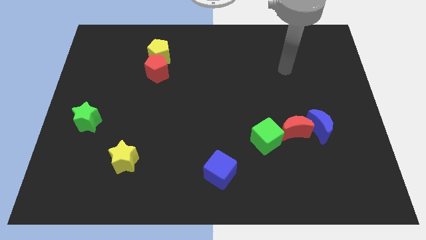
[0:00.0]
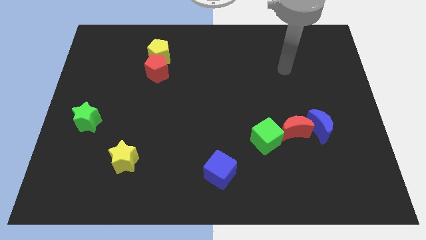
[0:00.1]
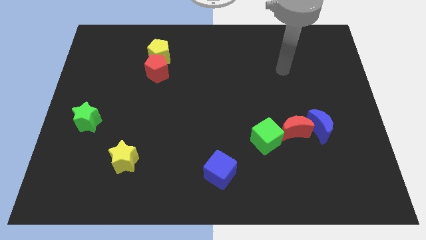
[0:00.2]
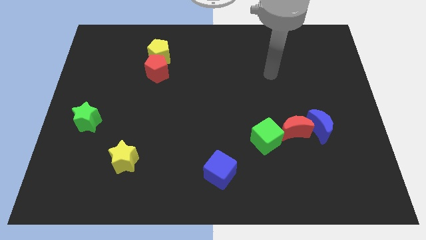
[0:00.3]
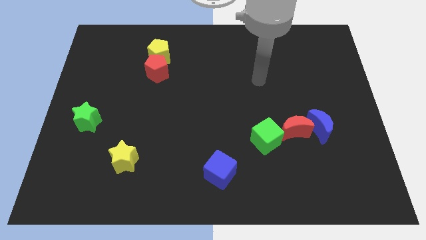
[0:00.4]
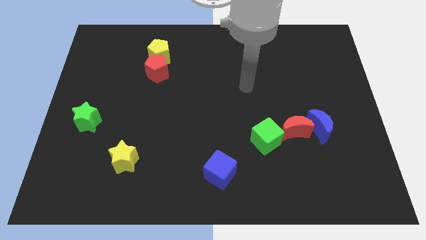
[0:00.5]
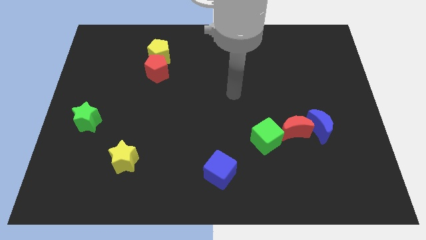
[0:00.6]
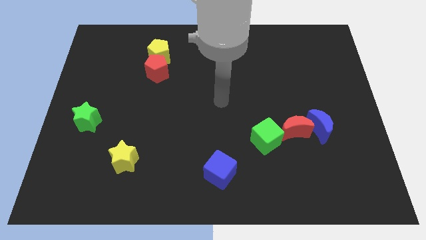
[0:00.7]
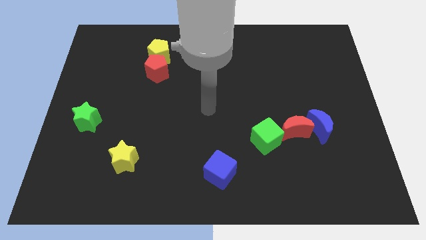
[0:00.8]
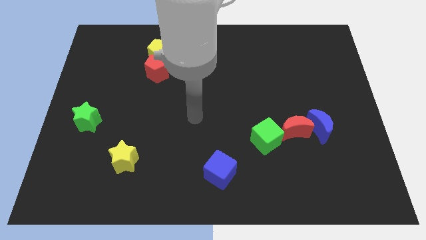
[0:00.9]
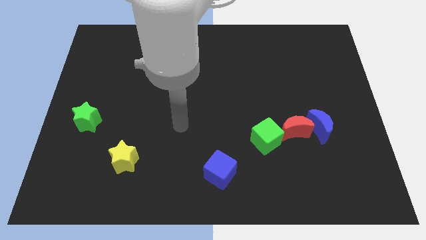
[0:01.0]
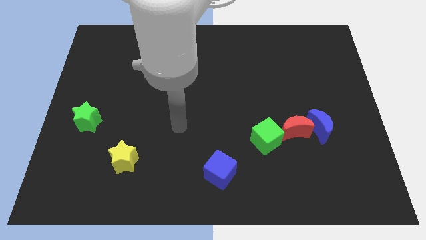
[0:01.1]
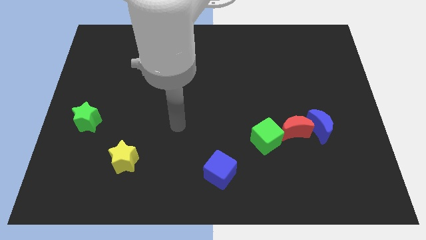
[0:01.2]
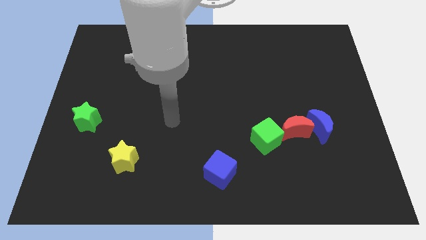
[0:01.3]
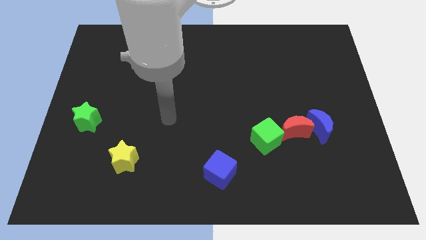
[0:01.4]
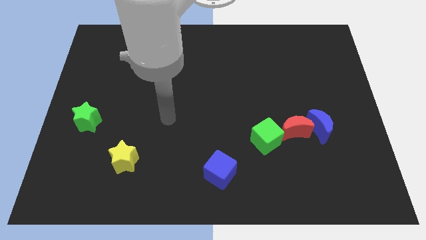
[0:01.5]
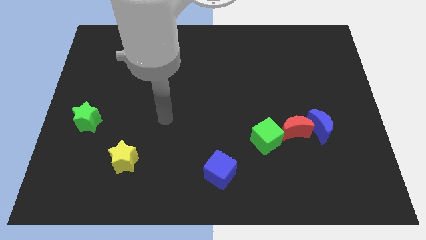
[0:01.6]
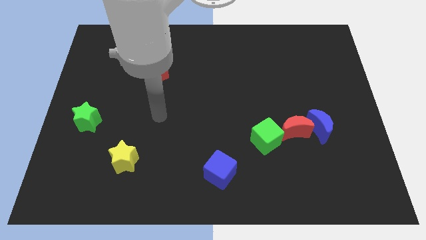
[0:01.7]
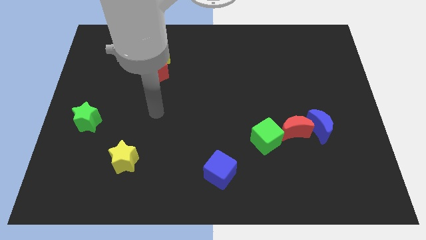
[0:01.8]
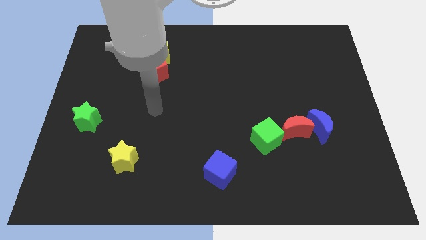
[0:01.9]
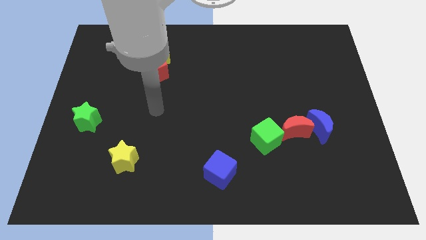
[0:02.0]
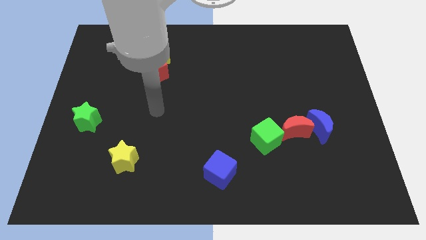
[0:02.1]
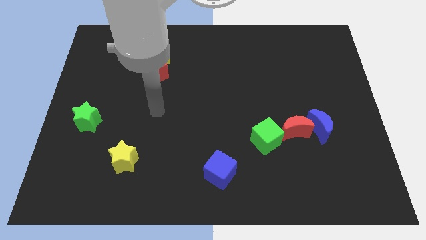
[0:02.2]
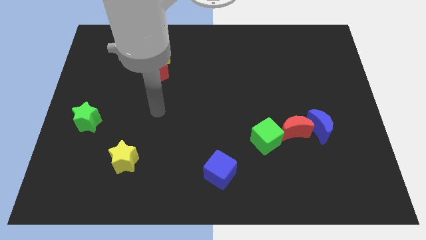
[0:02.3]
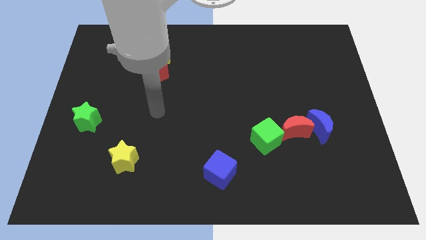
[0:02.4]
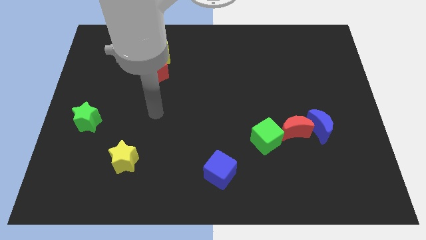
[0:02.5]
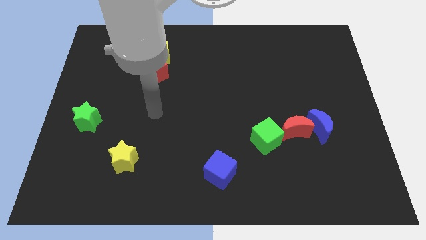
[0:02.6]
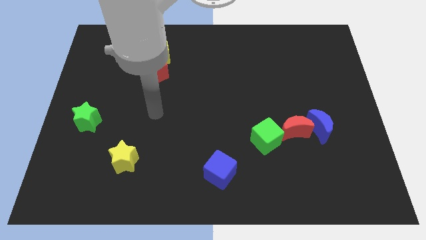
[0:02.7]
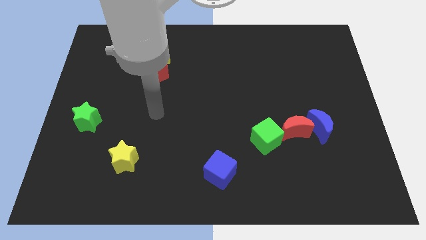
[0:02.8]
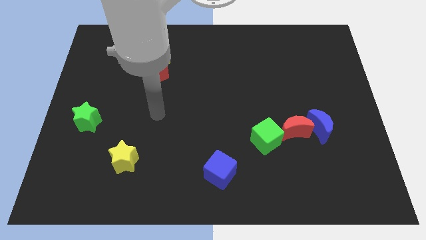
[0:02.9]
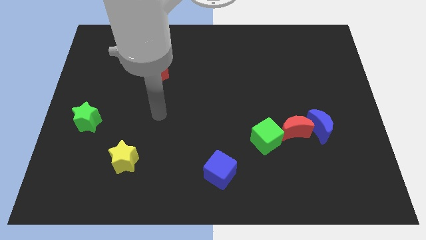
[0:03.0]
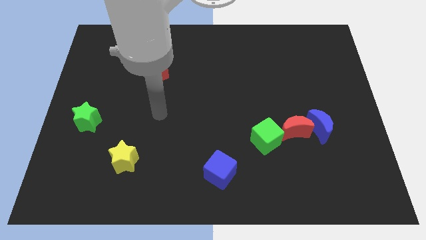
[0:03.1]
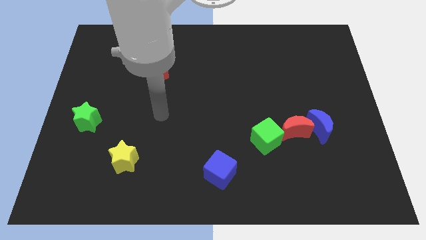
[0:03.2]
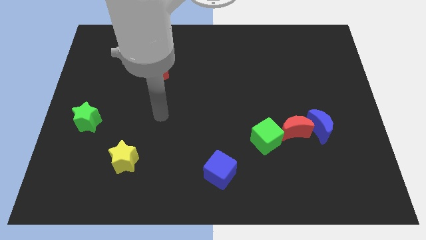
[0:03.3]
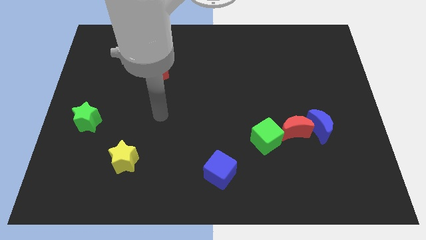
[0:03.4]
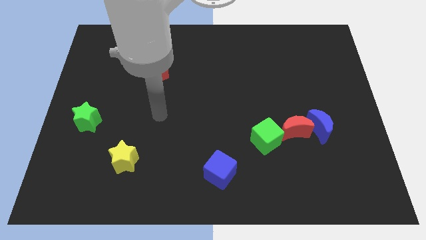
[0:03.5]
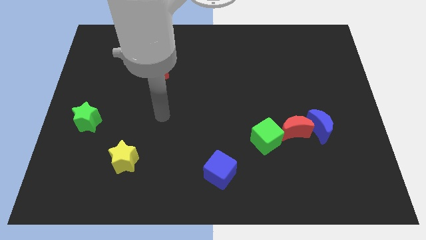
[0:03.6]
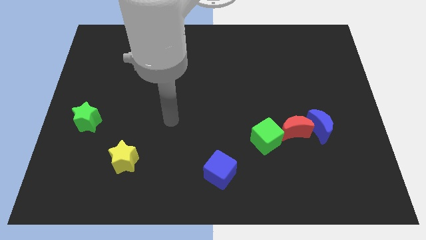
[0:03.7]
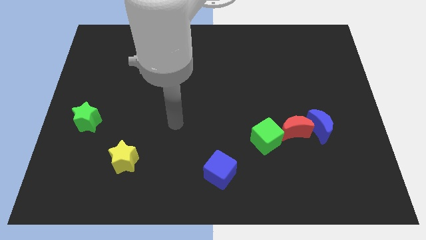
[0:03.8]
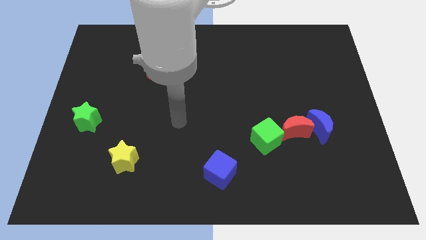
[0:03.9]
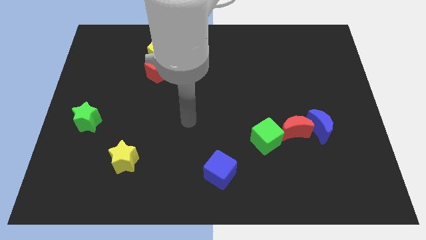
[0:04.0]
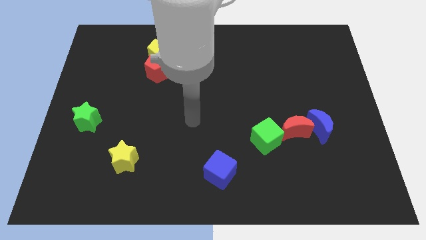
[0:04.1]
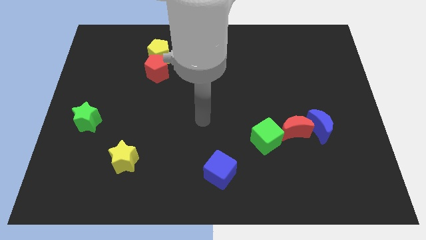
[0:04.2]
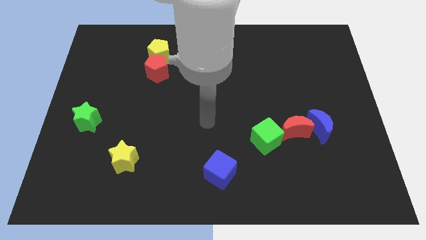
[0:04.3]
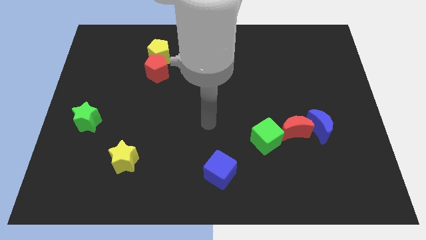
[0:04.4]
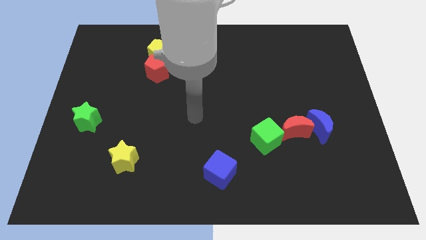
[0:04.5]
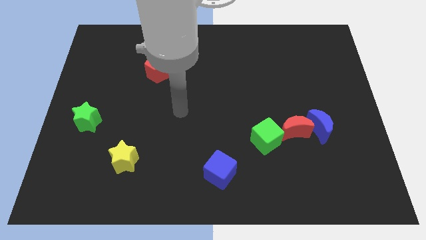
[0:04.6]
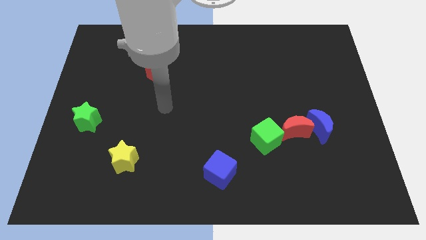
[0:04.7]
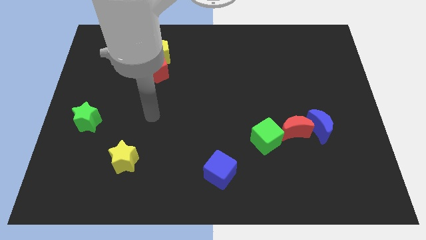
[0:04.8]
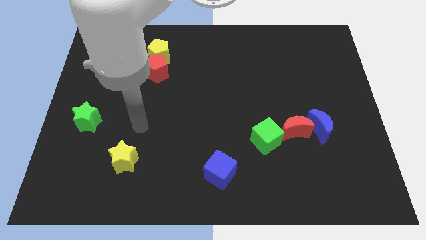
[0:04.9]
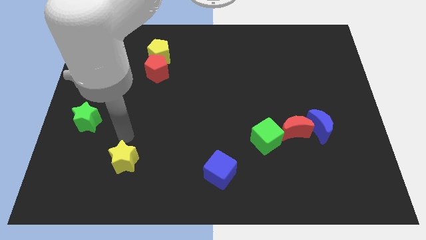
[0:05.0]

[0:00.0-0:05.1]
move your arm to the top side of the yellow star

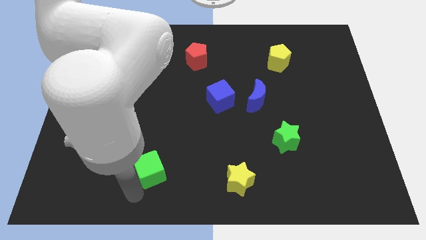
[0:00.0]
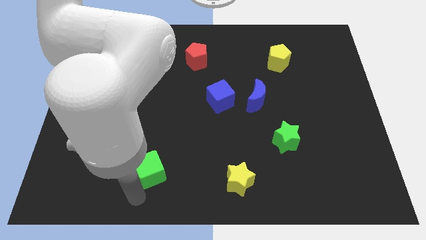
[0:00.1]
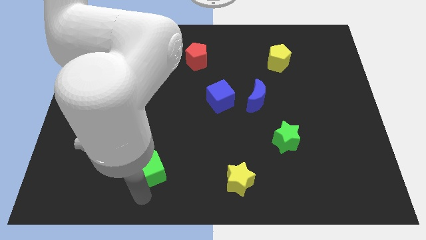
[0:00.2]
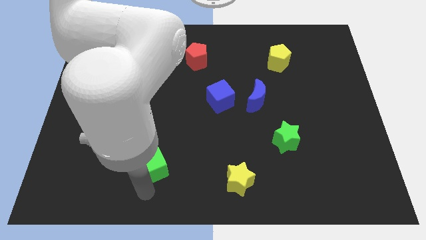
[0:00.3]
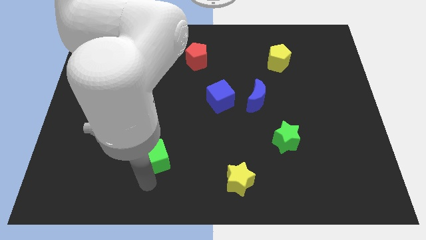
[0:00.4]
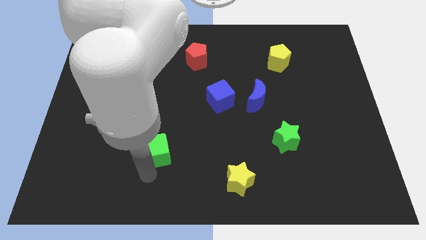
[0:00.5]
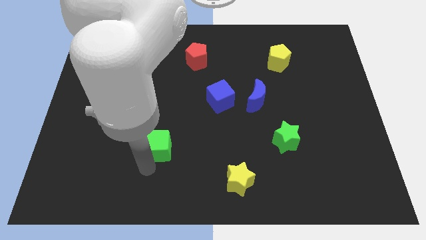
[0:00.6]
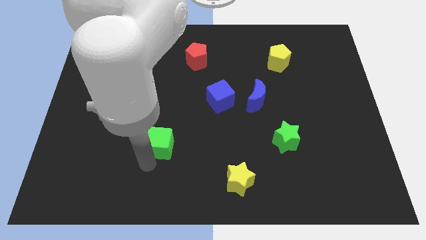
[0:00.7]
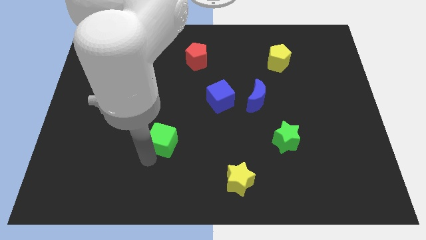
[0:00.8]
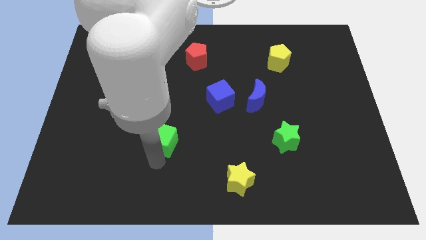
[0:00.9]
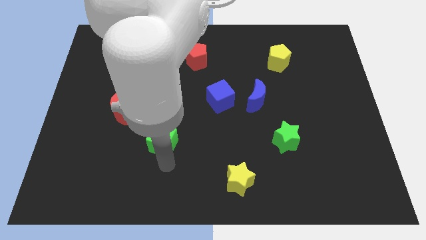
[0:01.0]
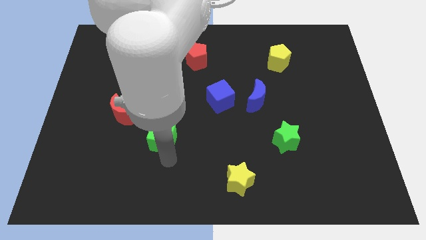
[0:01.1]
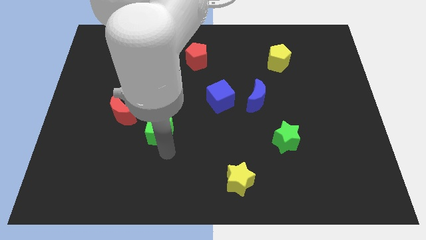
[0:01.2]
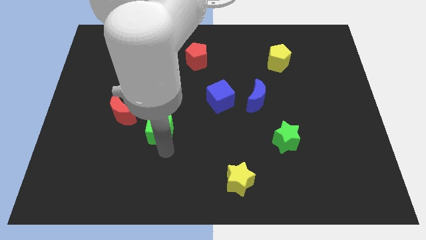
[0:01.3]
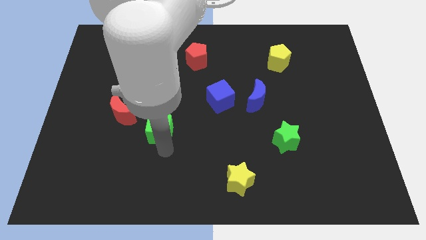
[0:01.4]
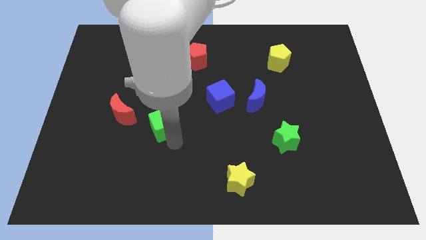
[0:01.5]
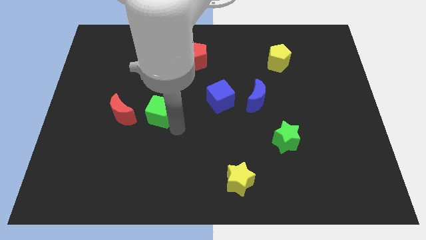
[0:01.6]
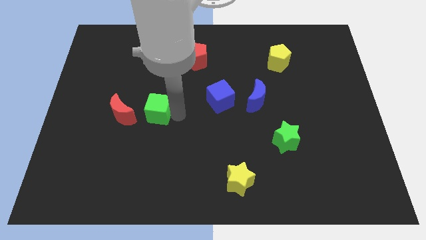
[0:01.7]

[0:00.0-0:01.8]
move the green cube to the right of the red crescent

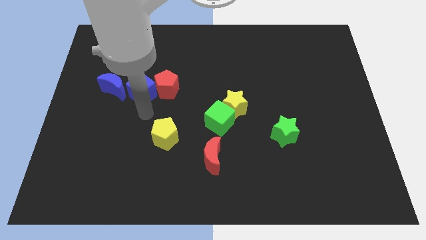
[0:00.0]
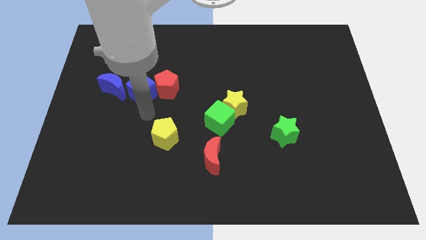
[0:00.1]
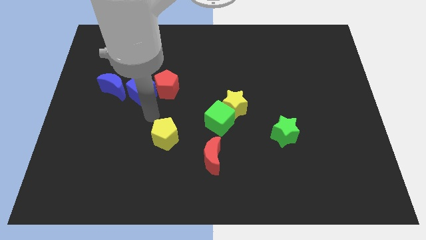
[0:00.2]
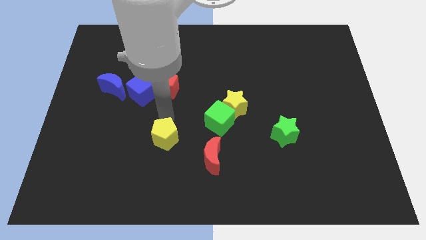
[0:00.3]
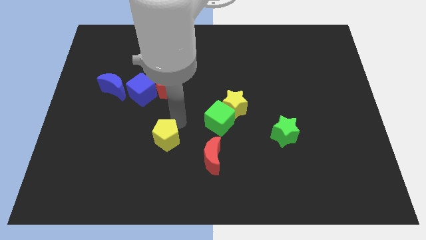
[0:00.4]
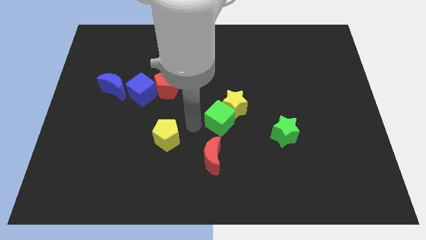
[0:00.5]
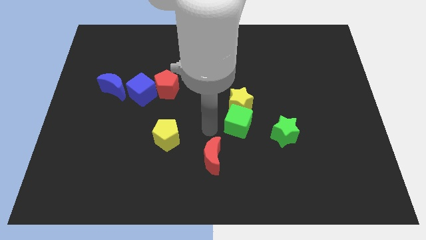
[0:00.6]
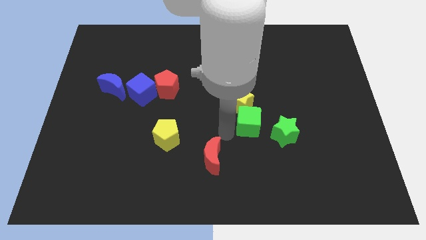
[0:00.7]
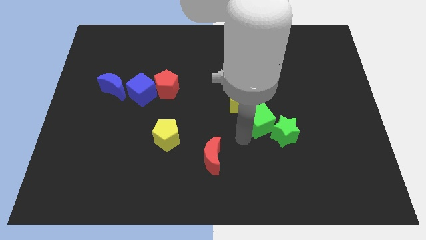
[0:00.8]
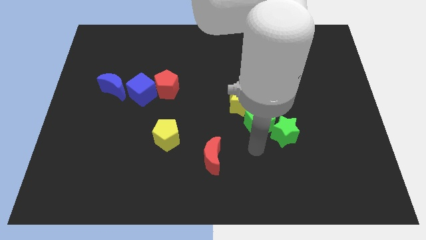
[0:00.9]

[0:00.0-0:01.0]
push green cube in to green star

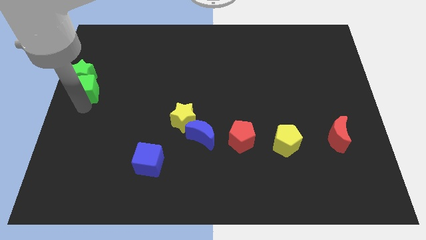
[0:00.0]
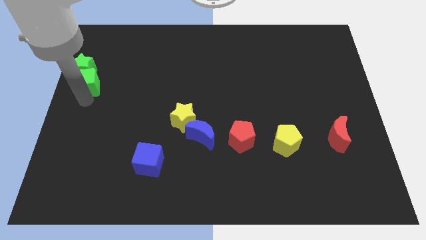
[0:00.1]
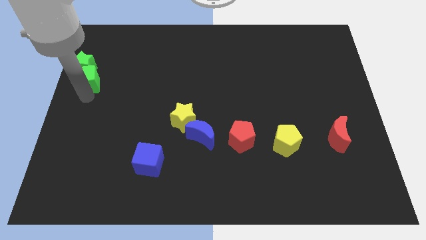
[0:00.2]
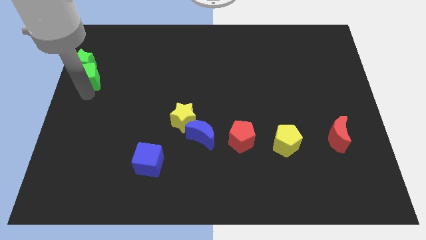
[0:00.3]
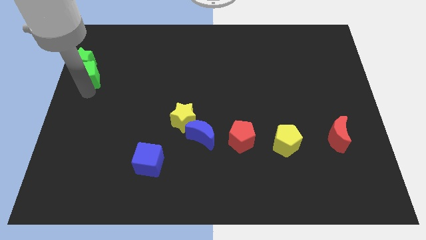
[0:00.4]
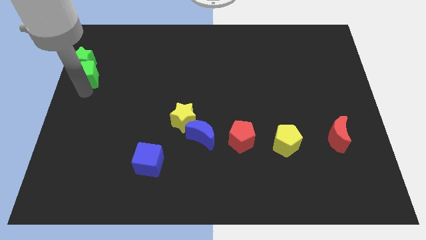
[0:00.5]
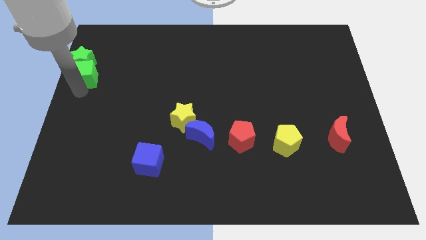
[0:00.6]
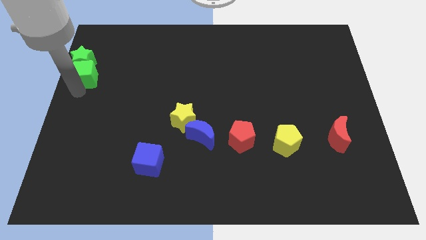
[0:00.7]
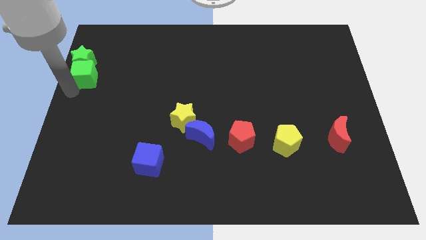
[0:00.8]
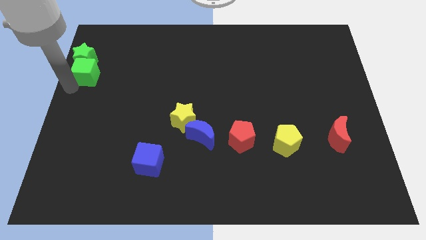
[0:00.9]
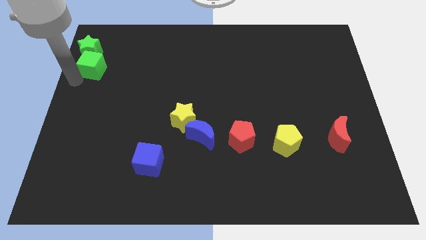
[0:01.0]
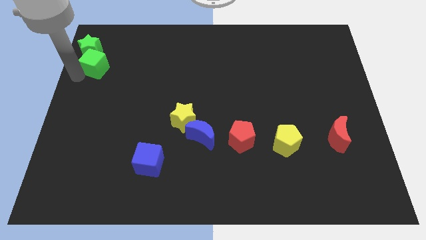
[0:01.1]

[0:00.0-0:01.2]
move green cube and green star at the top left
